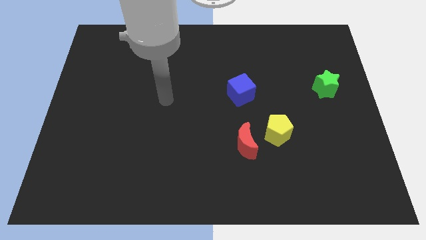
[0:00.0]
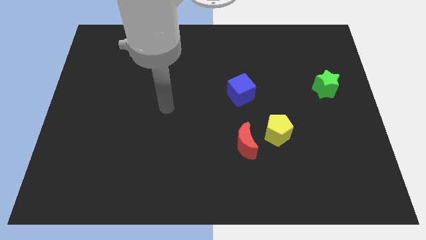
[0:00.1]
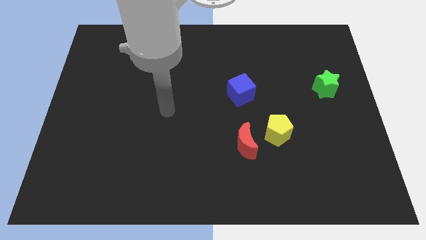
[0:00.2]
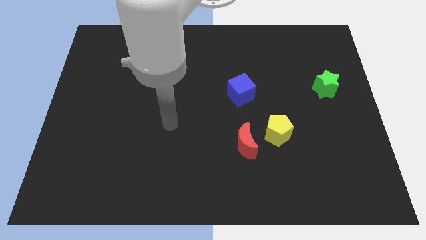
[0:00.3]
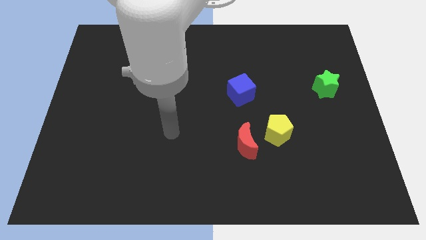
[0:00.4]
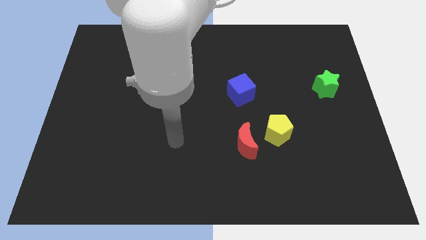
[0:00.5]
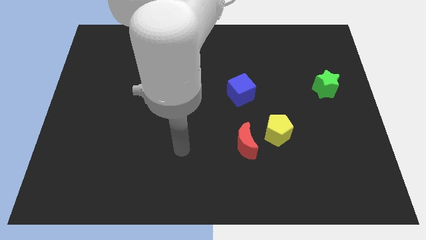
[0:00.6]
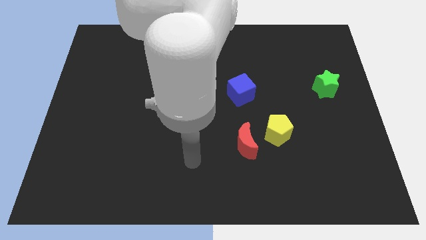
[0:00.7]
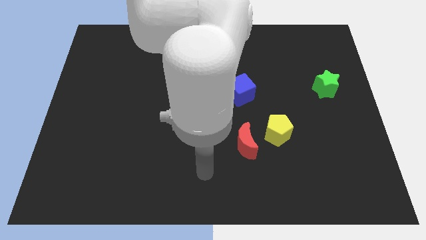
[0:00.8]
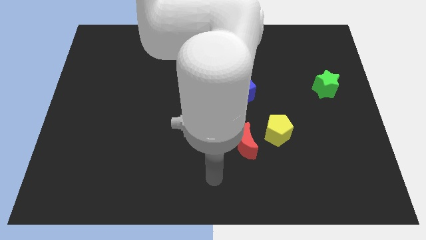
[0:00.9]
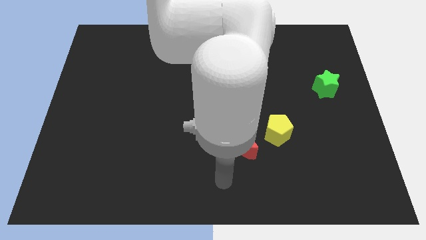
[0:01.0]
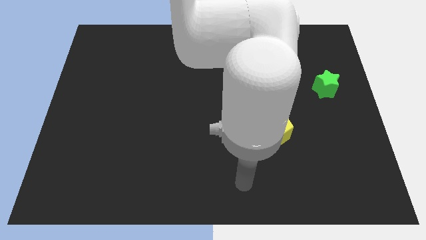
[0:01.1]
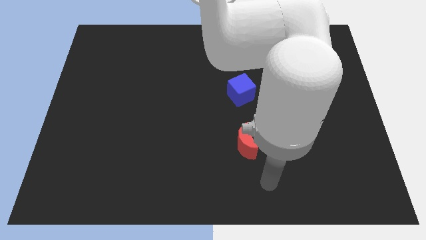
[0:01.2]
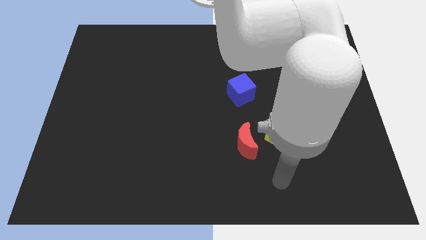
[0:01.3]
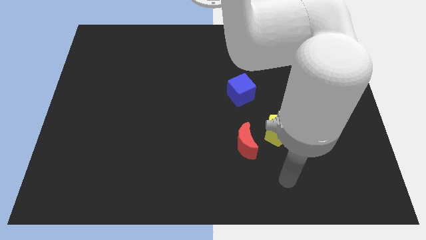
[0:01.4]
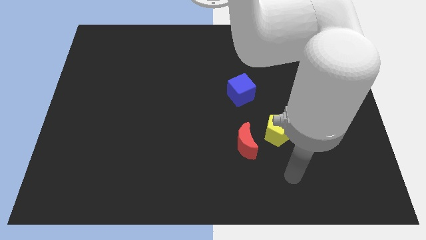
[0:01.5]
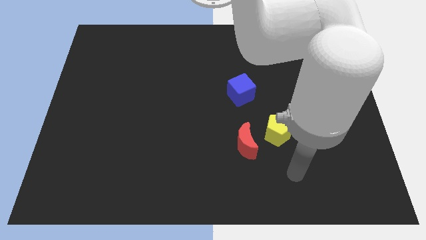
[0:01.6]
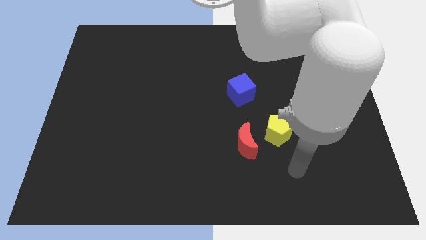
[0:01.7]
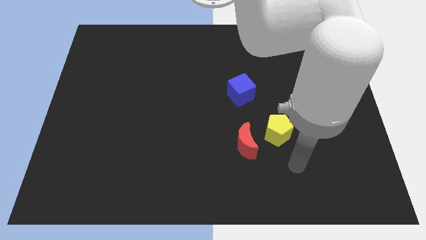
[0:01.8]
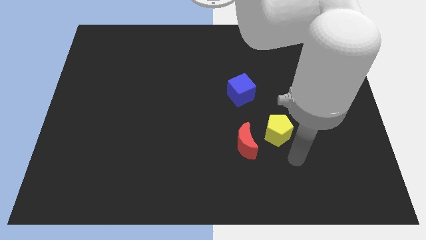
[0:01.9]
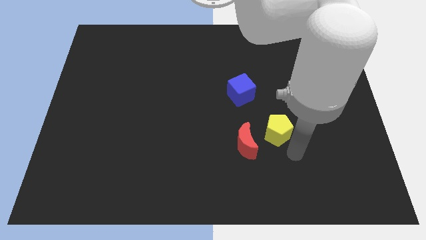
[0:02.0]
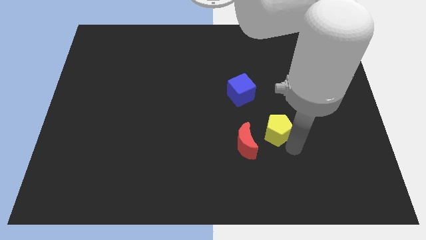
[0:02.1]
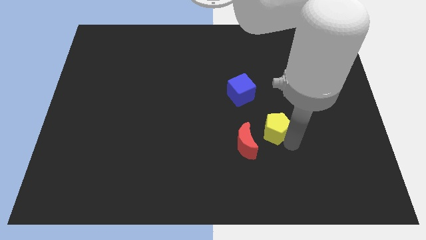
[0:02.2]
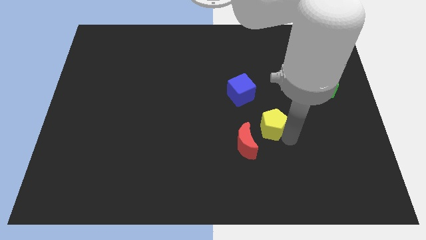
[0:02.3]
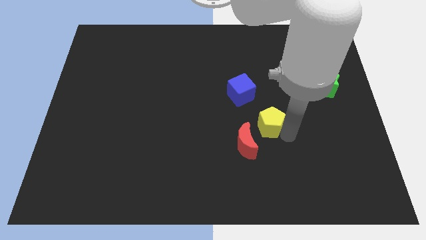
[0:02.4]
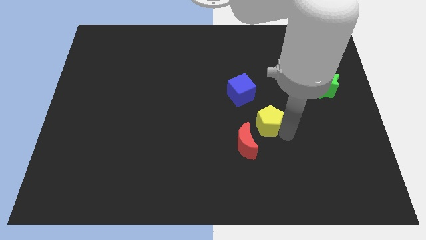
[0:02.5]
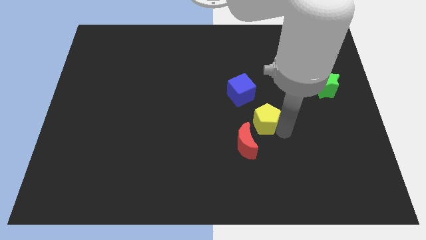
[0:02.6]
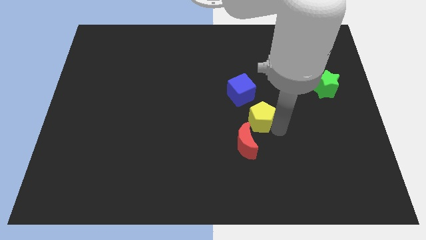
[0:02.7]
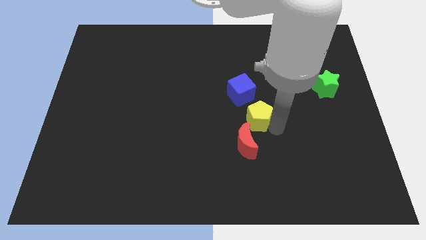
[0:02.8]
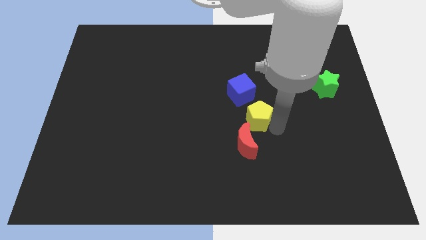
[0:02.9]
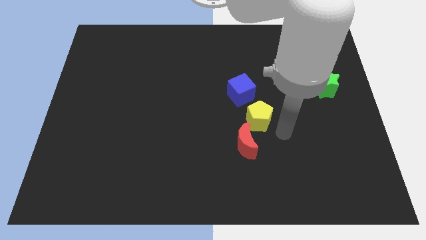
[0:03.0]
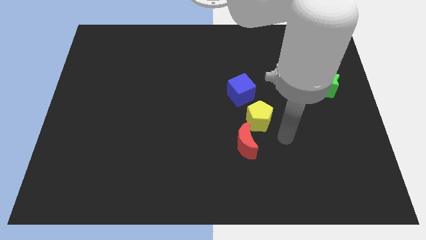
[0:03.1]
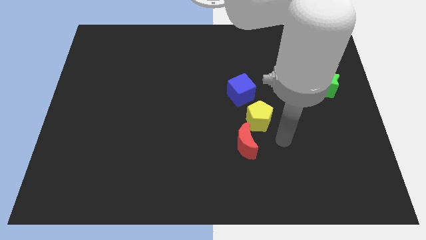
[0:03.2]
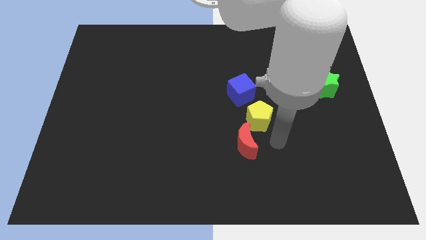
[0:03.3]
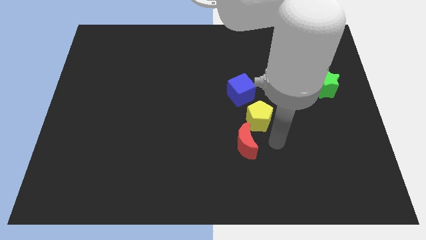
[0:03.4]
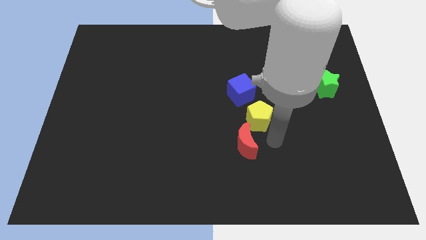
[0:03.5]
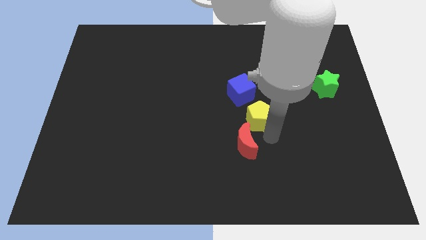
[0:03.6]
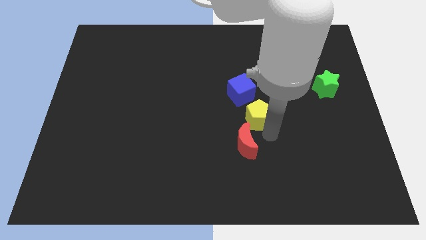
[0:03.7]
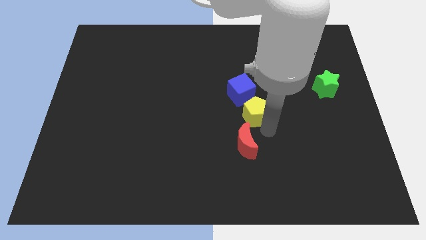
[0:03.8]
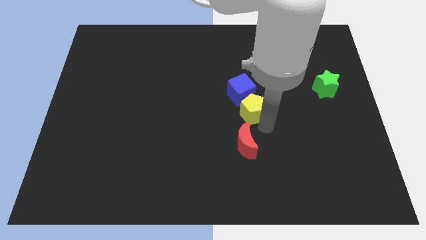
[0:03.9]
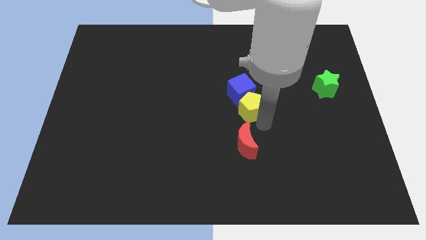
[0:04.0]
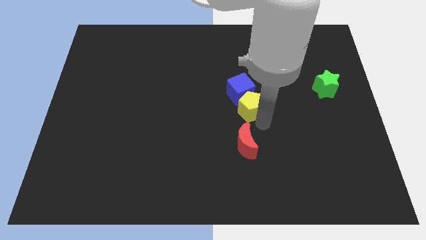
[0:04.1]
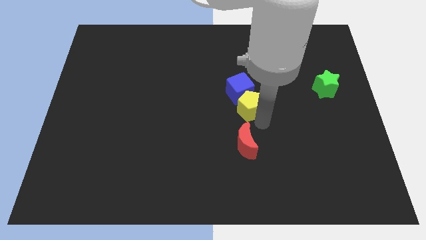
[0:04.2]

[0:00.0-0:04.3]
slide the yellow block close to the cube

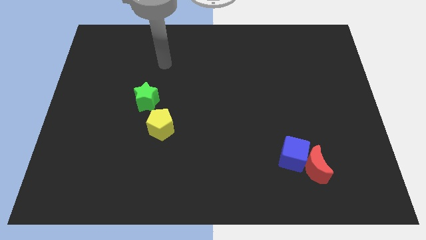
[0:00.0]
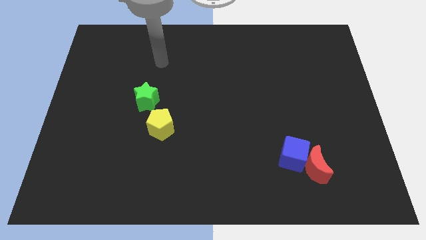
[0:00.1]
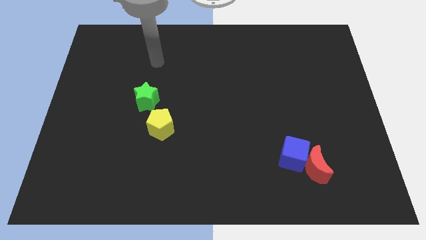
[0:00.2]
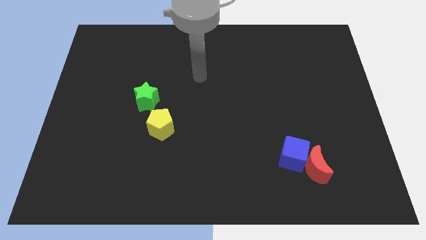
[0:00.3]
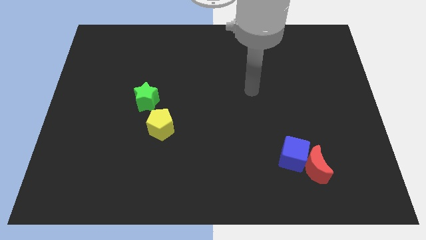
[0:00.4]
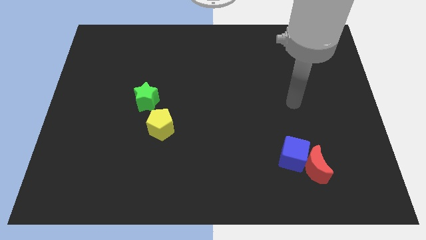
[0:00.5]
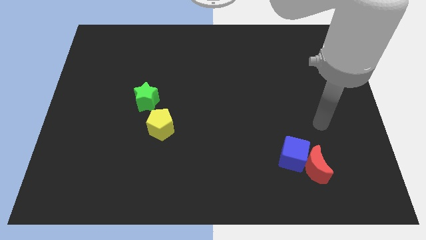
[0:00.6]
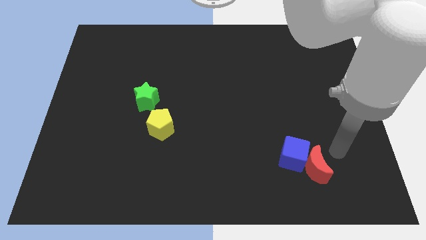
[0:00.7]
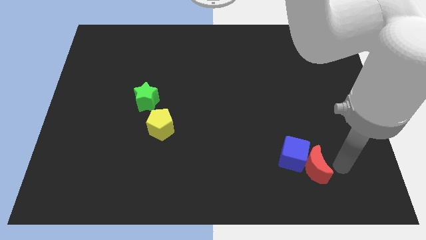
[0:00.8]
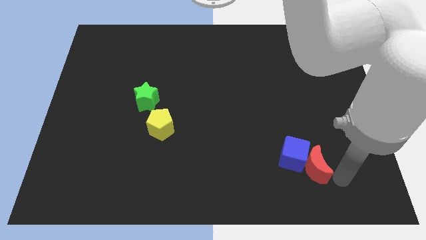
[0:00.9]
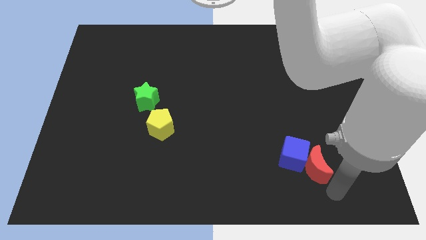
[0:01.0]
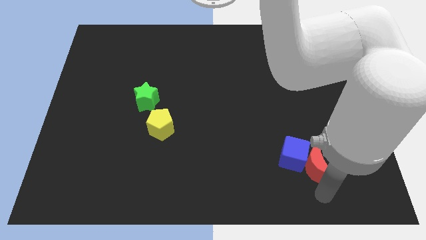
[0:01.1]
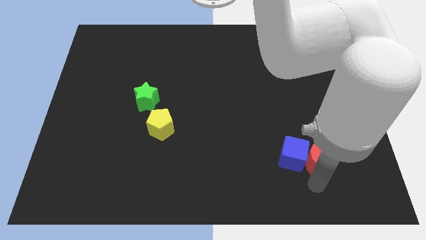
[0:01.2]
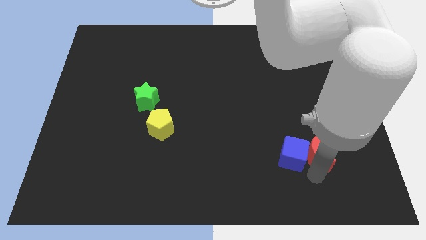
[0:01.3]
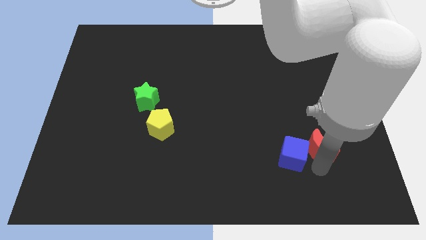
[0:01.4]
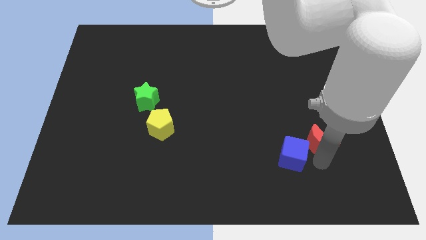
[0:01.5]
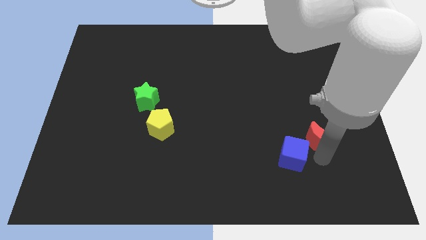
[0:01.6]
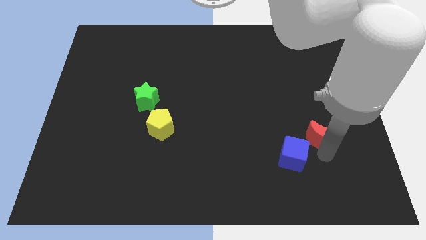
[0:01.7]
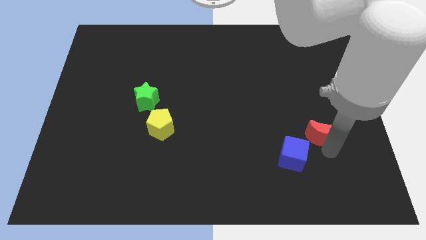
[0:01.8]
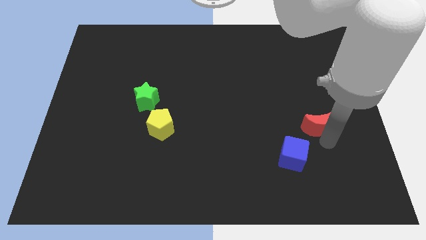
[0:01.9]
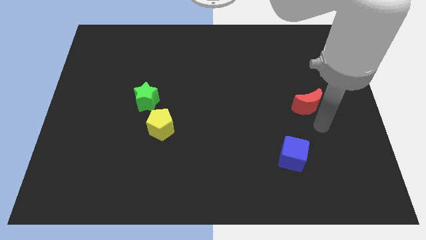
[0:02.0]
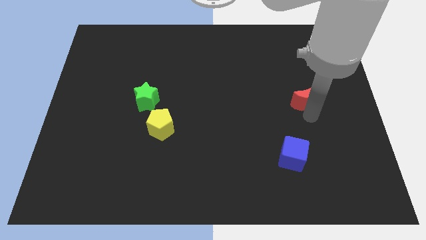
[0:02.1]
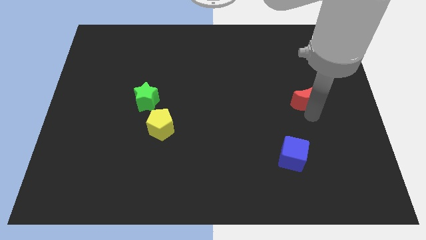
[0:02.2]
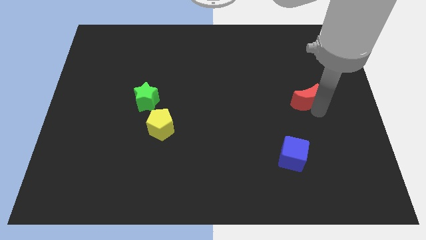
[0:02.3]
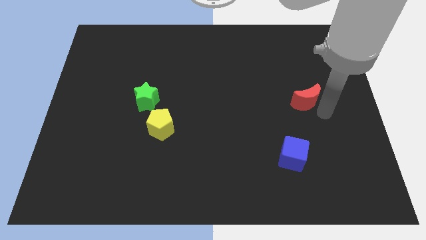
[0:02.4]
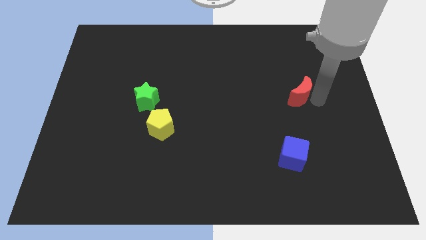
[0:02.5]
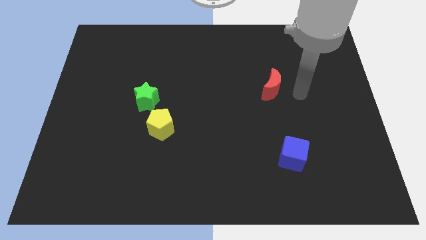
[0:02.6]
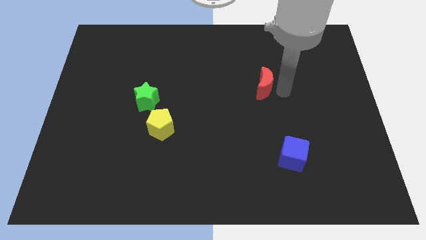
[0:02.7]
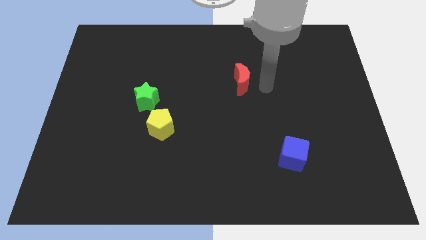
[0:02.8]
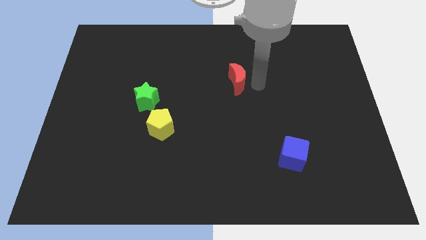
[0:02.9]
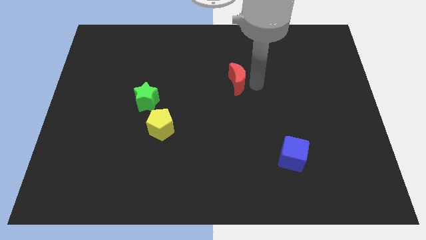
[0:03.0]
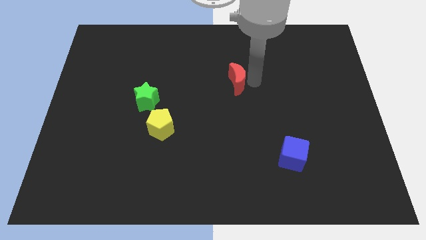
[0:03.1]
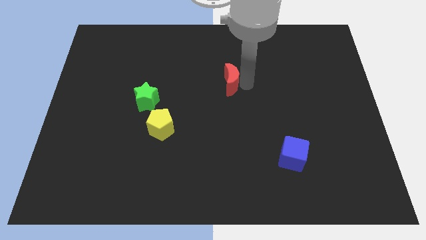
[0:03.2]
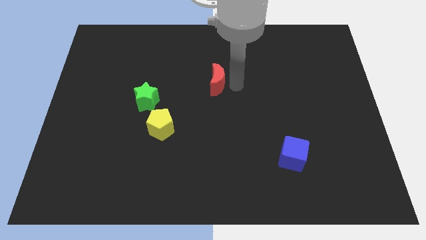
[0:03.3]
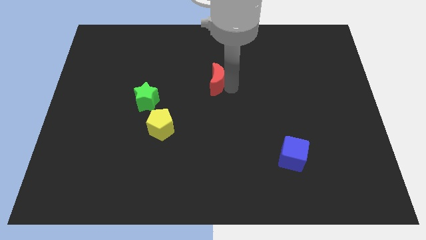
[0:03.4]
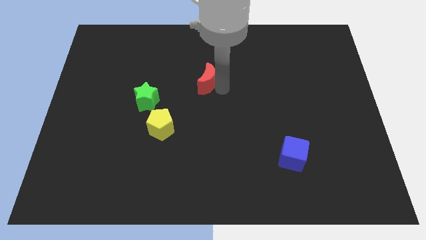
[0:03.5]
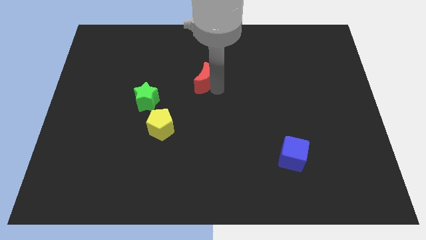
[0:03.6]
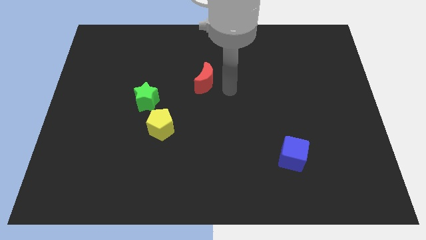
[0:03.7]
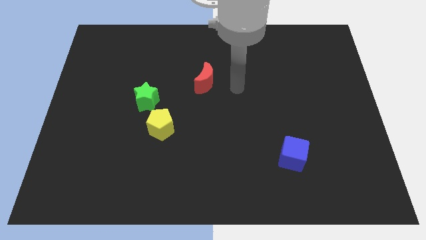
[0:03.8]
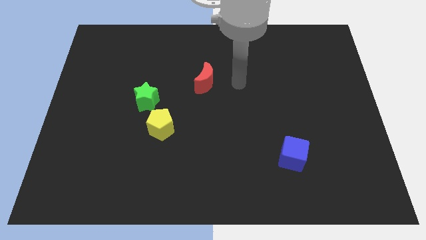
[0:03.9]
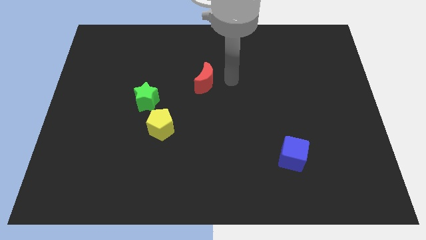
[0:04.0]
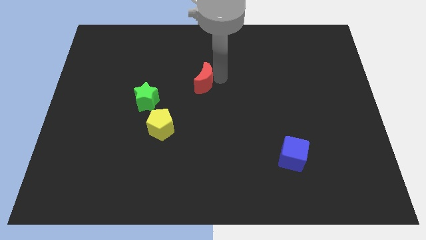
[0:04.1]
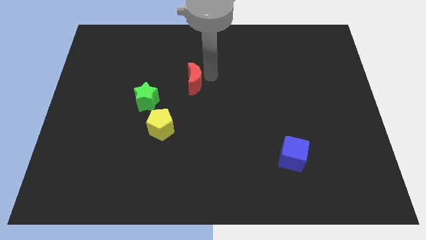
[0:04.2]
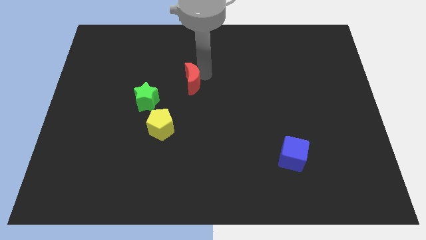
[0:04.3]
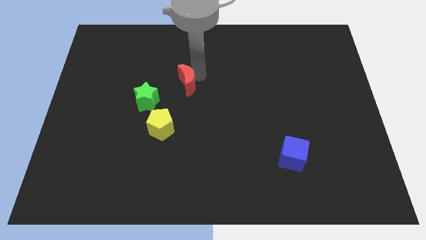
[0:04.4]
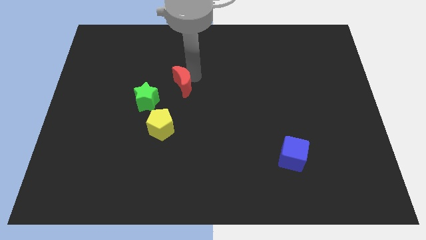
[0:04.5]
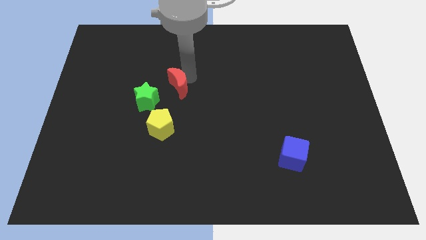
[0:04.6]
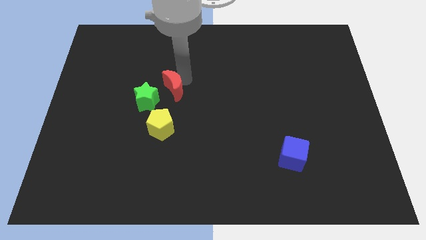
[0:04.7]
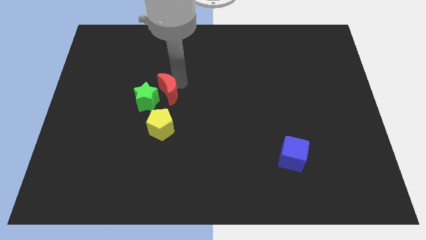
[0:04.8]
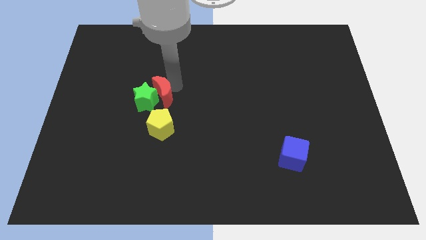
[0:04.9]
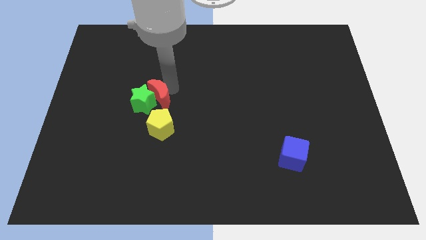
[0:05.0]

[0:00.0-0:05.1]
push the red moon towards the green block
